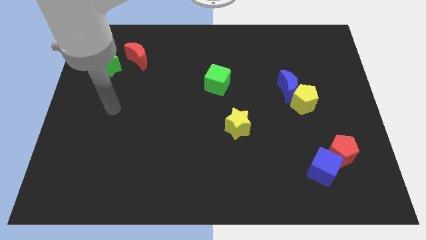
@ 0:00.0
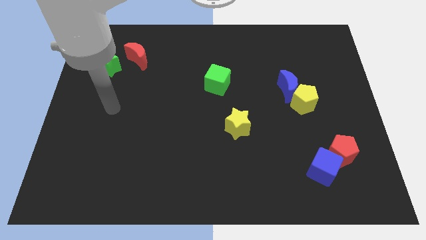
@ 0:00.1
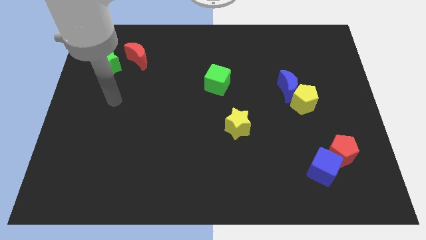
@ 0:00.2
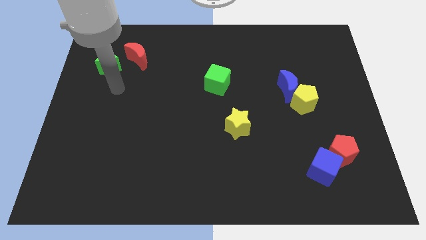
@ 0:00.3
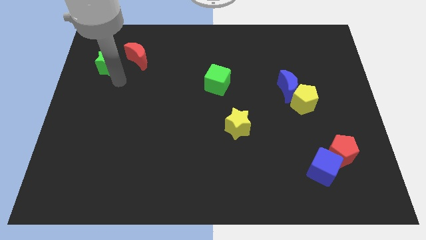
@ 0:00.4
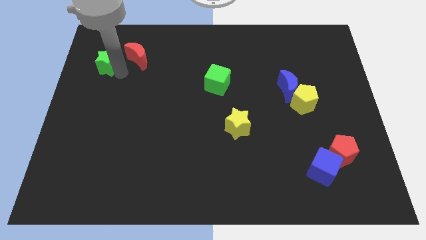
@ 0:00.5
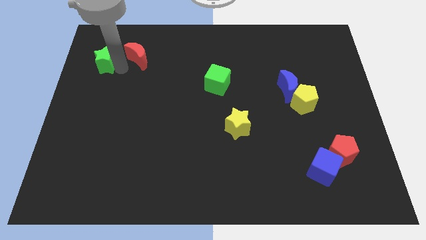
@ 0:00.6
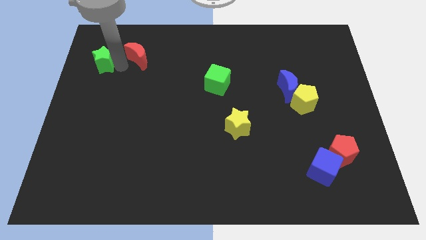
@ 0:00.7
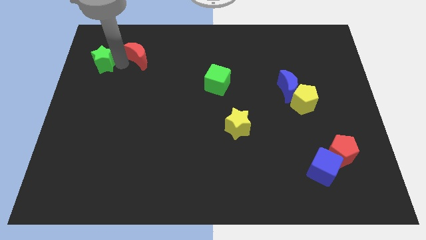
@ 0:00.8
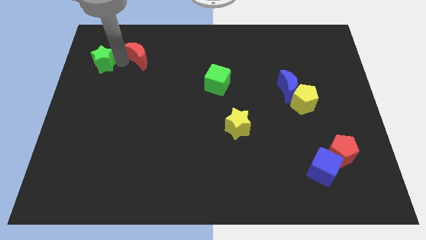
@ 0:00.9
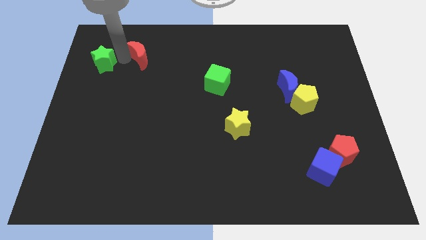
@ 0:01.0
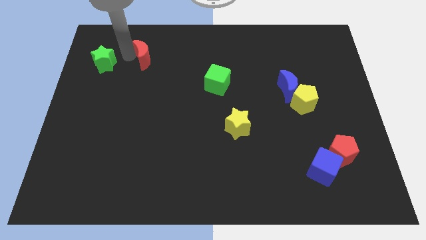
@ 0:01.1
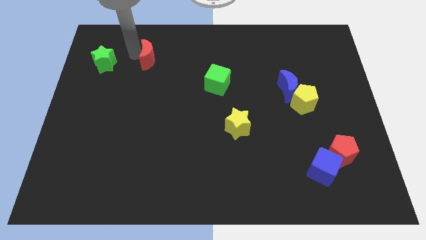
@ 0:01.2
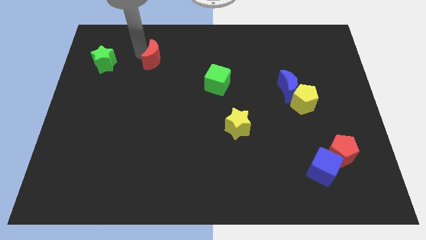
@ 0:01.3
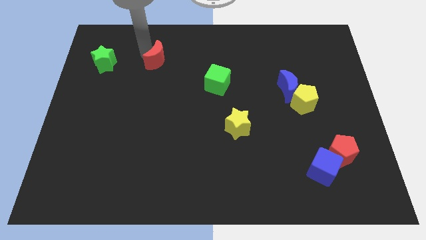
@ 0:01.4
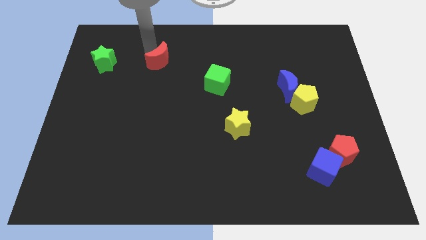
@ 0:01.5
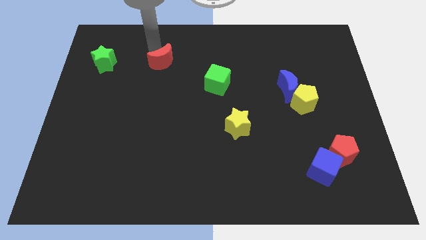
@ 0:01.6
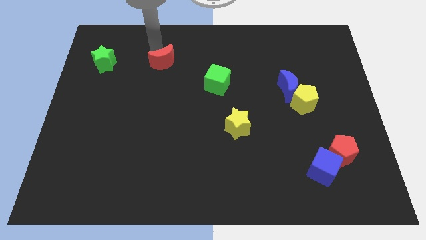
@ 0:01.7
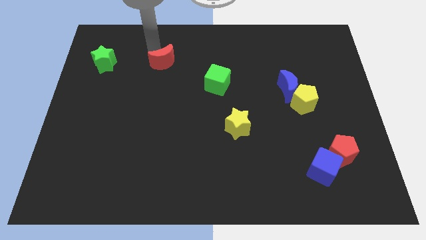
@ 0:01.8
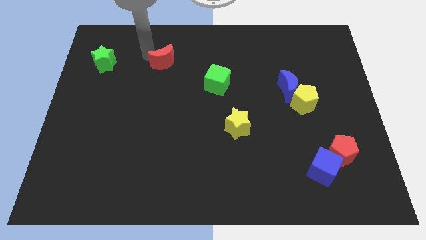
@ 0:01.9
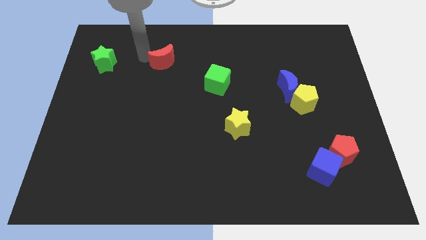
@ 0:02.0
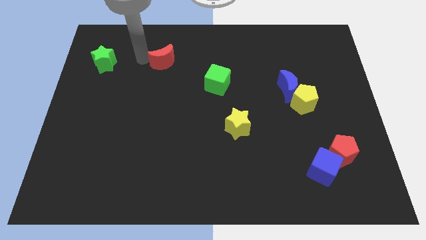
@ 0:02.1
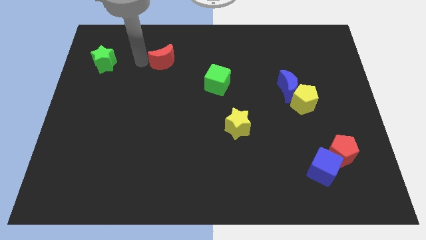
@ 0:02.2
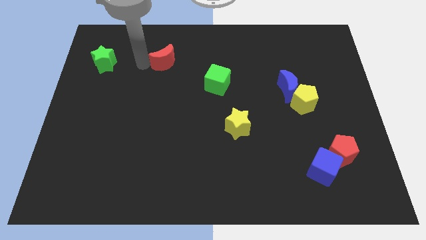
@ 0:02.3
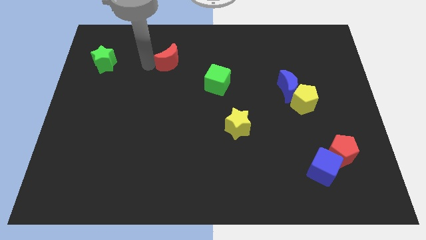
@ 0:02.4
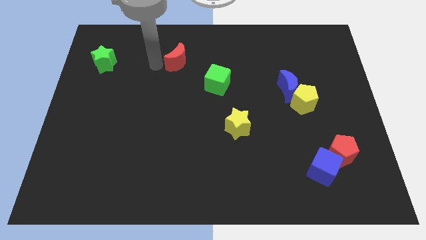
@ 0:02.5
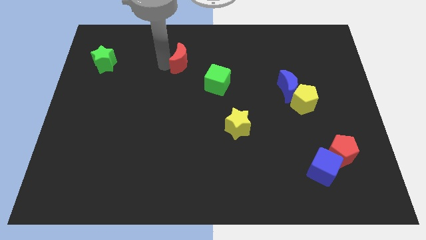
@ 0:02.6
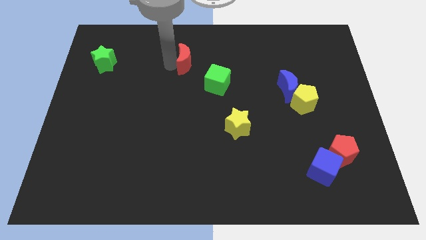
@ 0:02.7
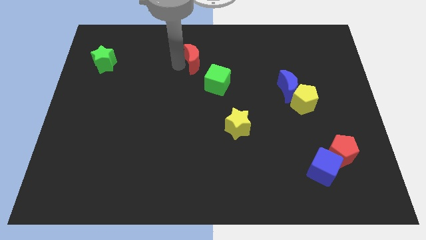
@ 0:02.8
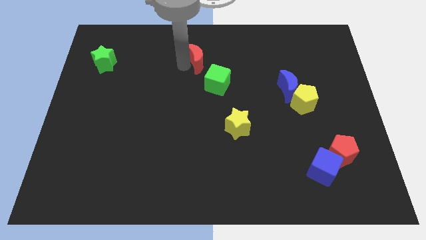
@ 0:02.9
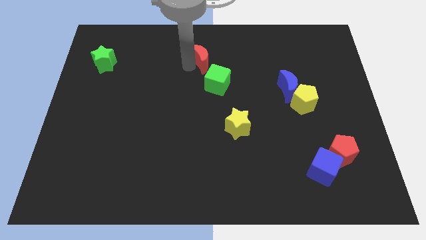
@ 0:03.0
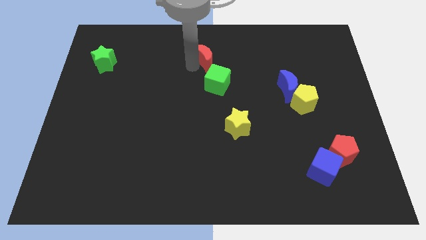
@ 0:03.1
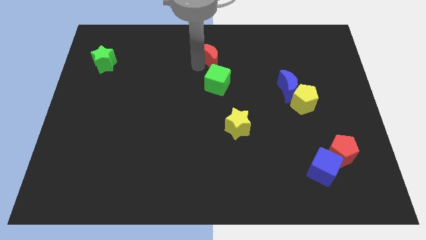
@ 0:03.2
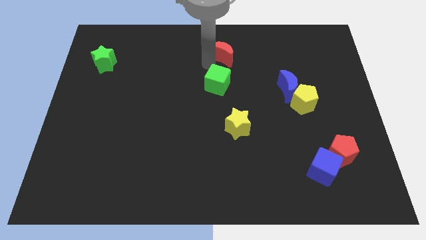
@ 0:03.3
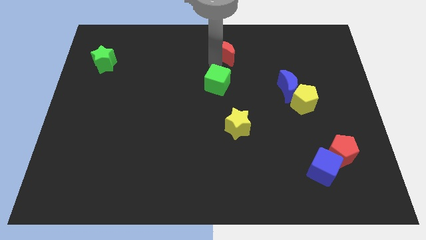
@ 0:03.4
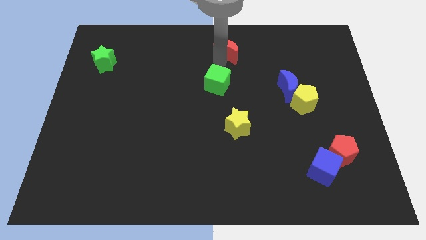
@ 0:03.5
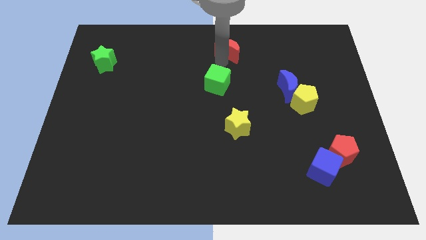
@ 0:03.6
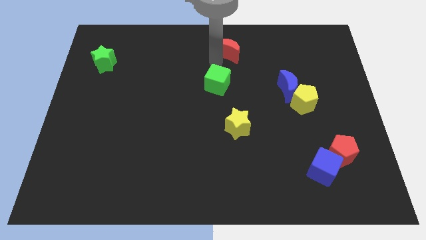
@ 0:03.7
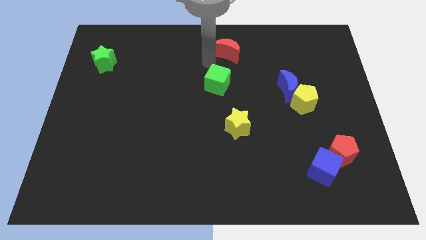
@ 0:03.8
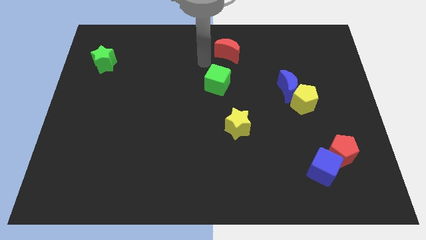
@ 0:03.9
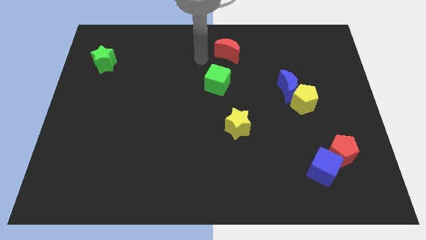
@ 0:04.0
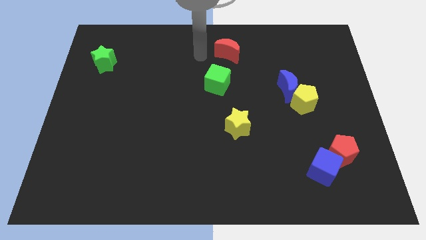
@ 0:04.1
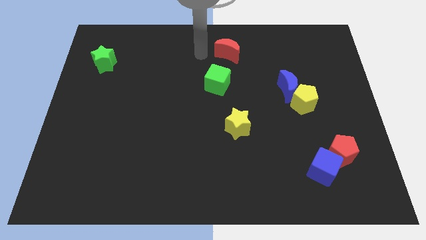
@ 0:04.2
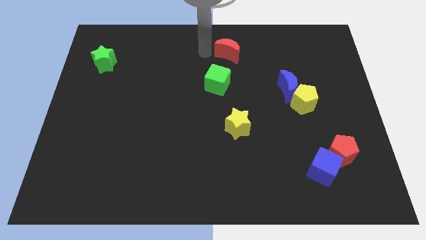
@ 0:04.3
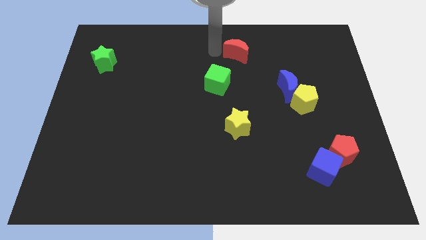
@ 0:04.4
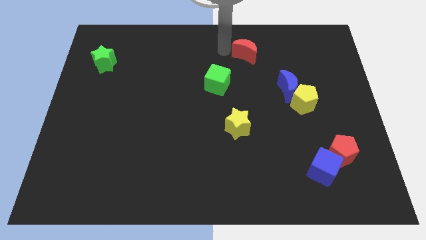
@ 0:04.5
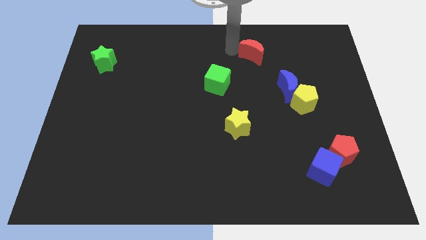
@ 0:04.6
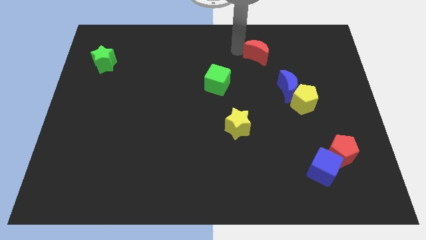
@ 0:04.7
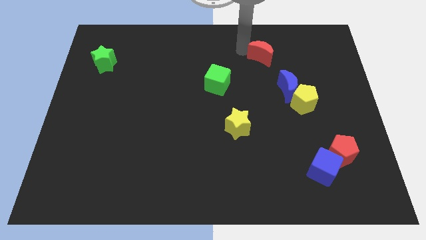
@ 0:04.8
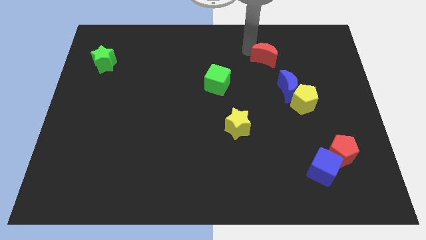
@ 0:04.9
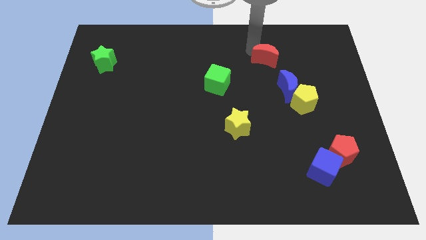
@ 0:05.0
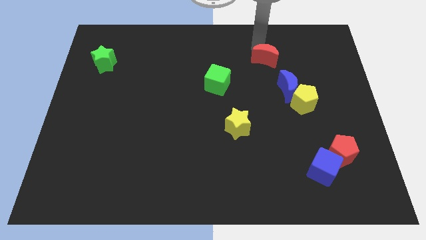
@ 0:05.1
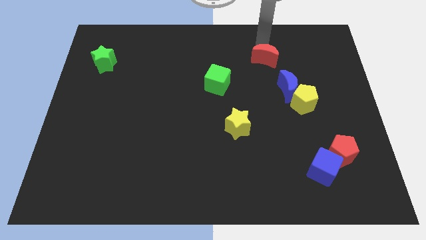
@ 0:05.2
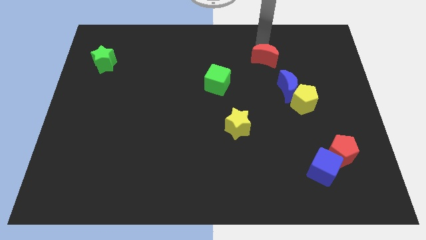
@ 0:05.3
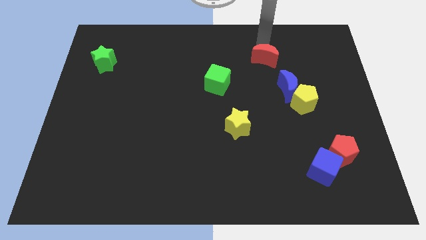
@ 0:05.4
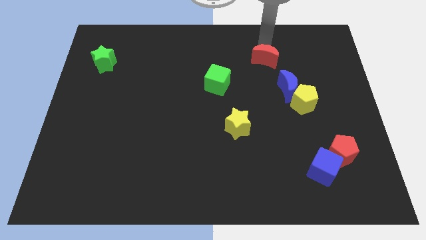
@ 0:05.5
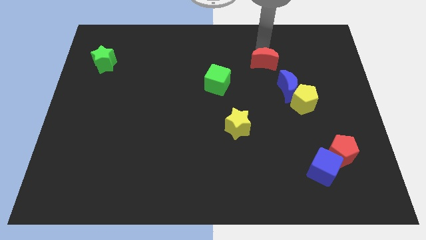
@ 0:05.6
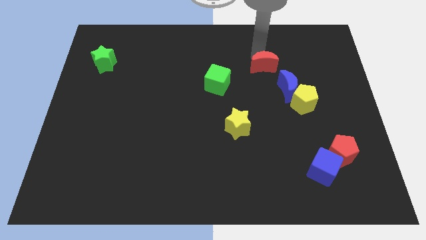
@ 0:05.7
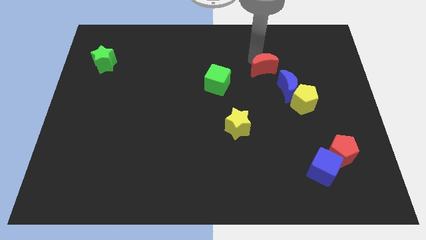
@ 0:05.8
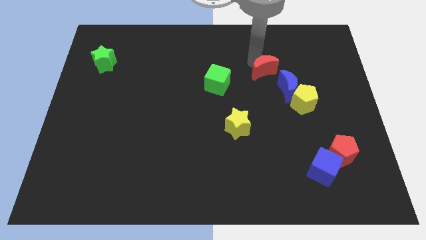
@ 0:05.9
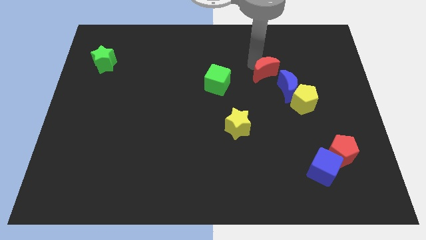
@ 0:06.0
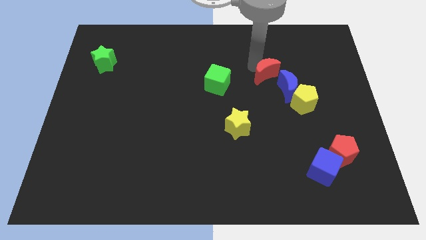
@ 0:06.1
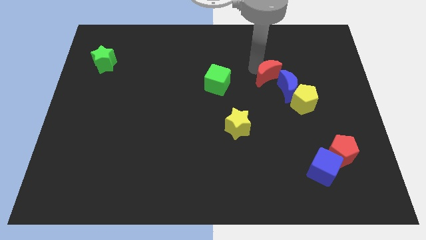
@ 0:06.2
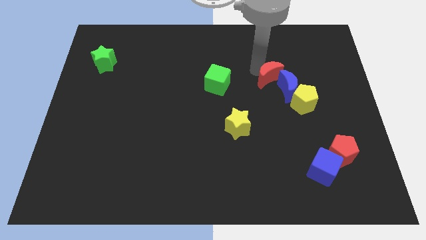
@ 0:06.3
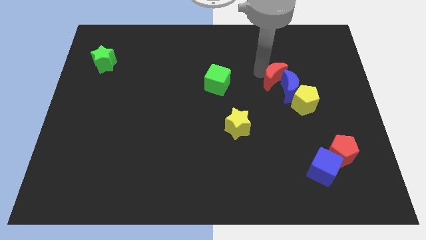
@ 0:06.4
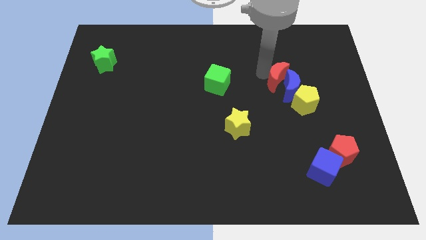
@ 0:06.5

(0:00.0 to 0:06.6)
push the red moon next to the blue moon

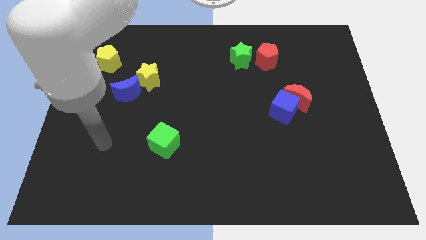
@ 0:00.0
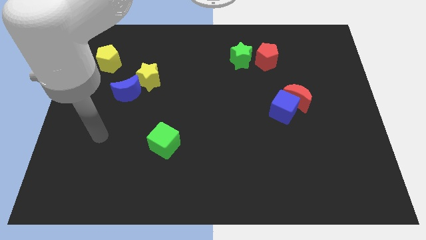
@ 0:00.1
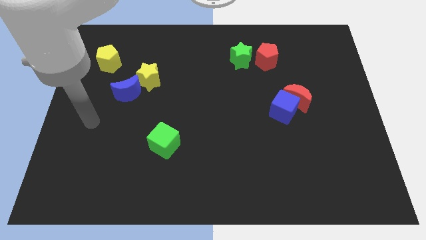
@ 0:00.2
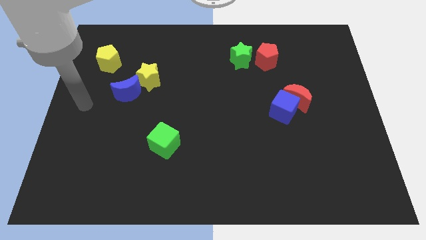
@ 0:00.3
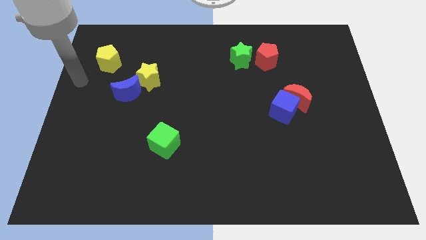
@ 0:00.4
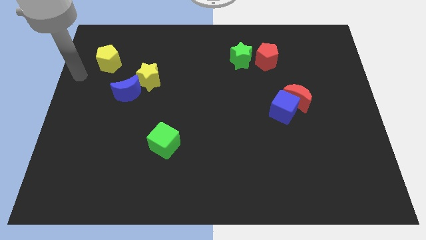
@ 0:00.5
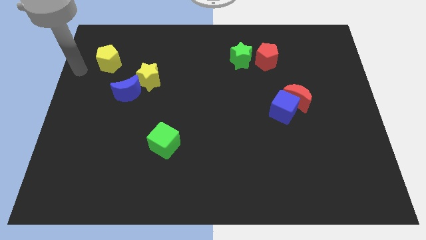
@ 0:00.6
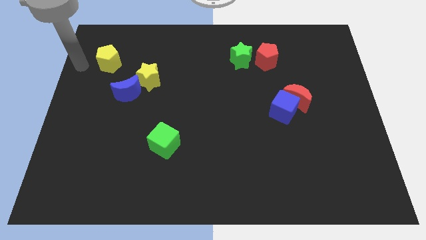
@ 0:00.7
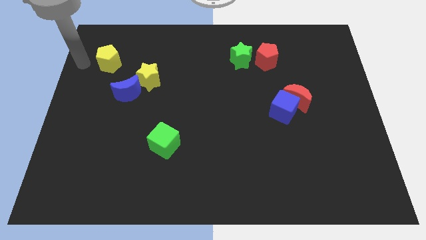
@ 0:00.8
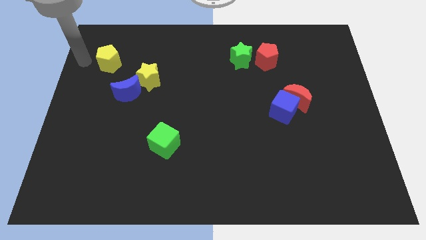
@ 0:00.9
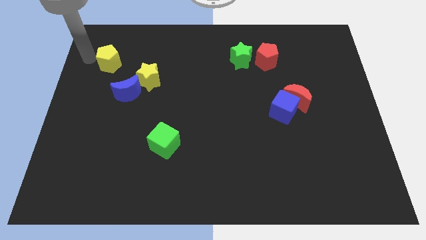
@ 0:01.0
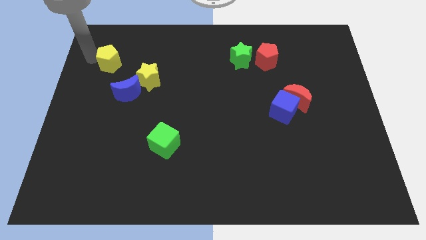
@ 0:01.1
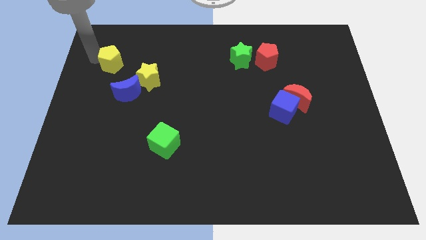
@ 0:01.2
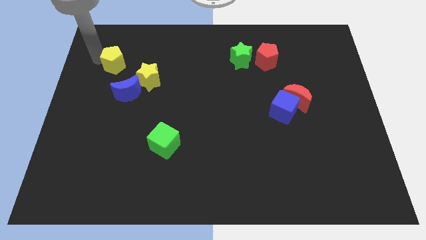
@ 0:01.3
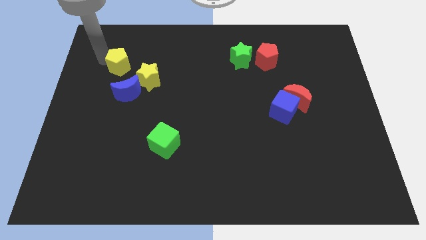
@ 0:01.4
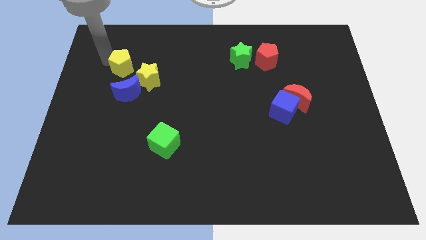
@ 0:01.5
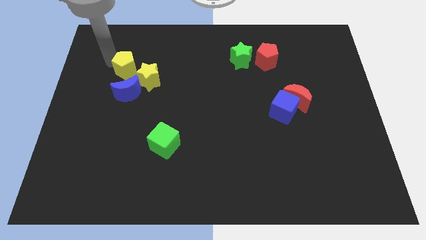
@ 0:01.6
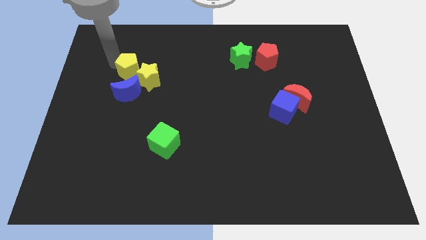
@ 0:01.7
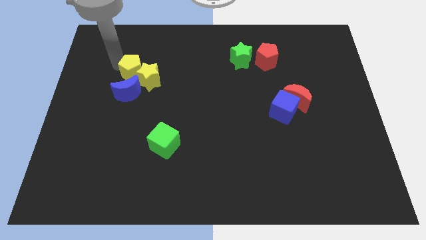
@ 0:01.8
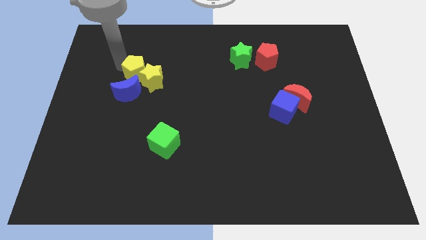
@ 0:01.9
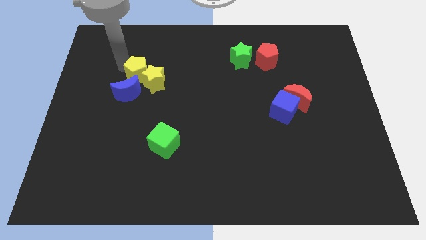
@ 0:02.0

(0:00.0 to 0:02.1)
slide the yellow pentagon towards the yellow star
